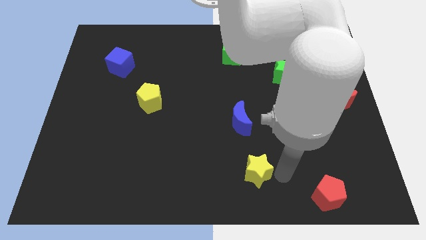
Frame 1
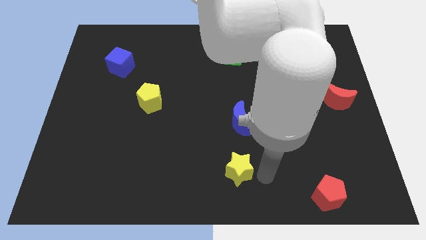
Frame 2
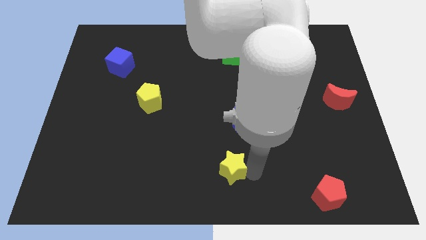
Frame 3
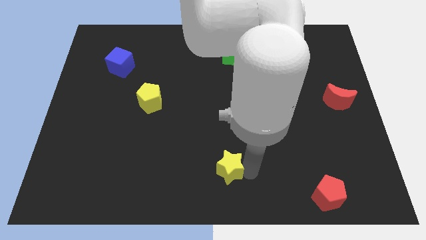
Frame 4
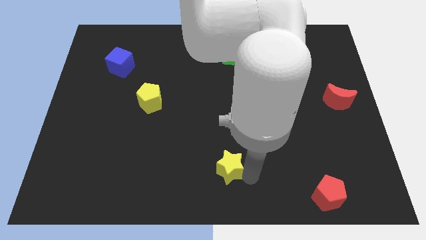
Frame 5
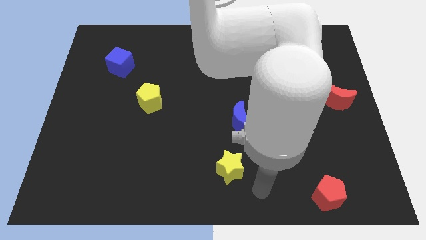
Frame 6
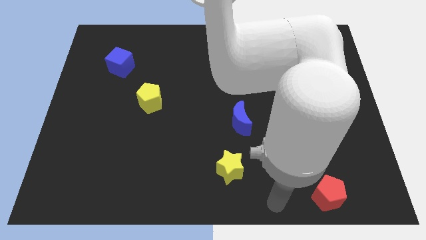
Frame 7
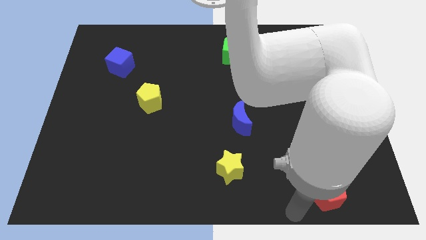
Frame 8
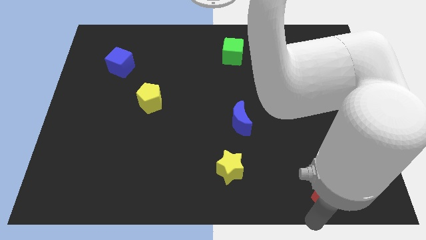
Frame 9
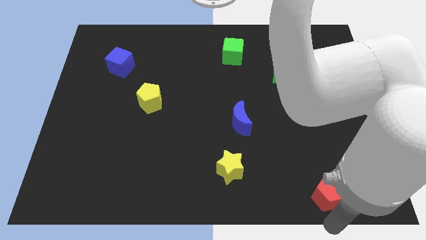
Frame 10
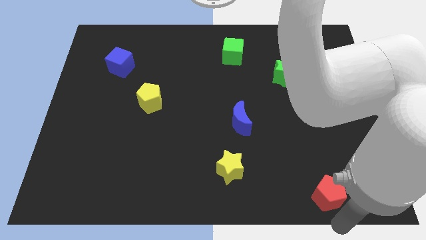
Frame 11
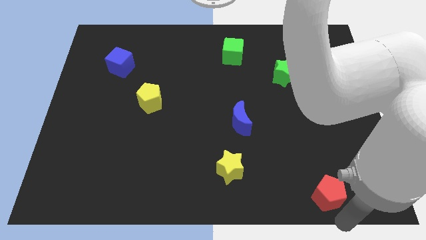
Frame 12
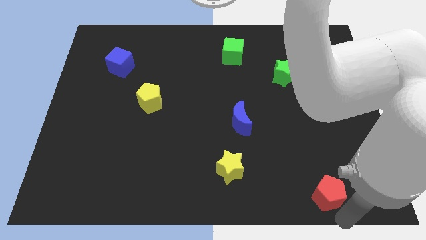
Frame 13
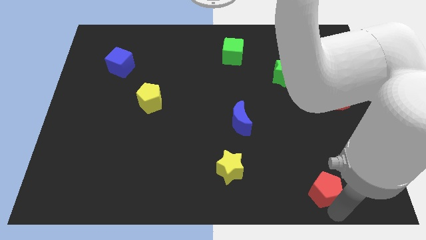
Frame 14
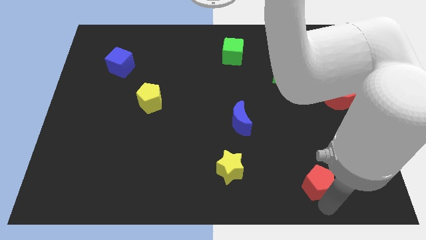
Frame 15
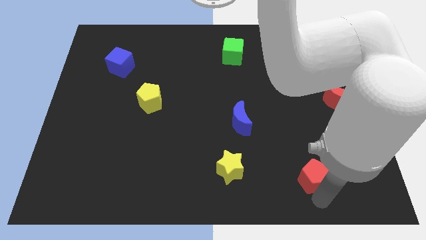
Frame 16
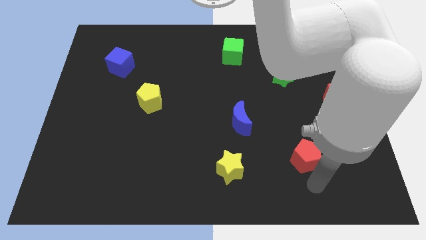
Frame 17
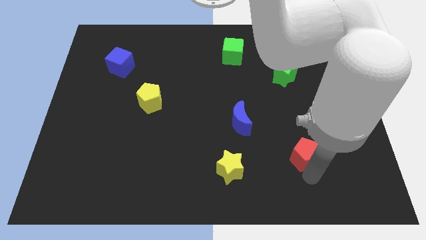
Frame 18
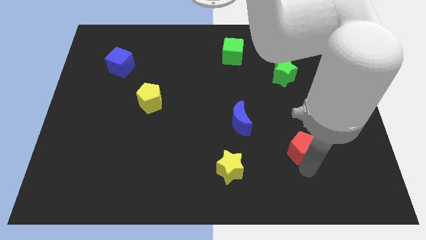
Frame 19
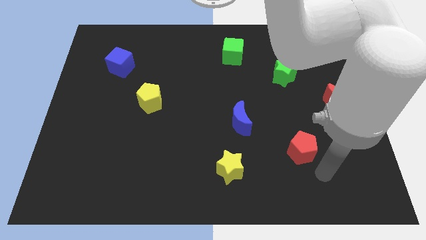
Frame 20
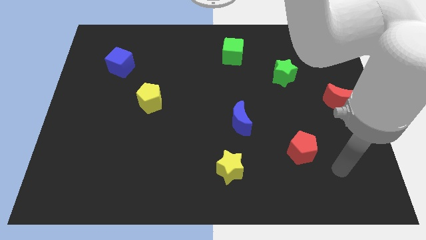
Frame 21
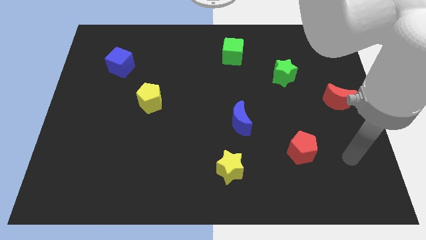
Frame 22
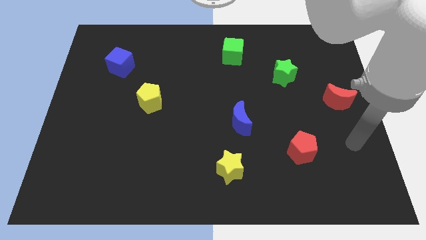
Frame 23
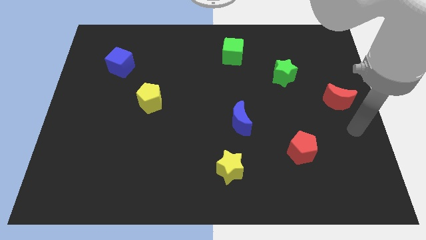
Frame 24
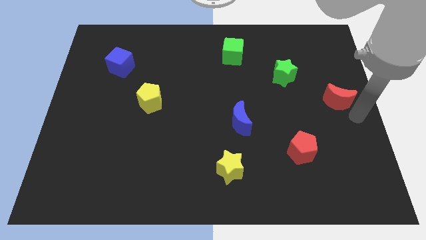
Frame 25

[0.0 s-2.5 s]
place the red pentagon towards the bottom left to the red moon

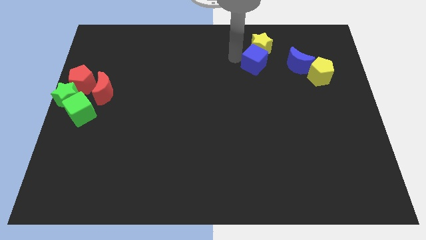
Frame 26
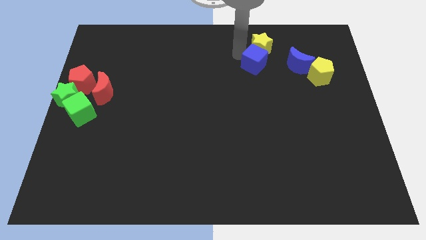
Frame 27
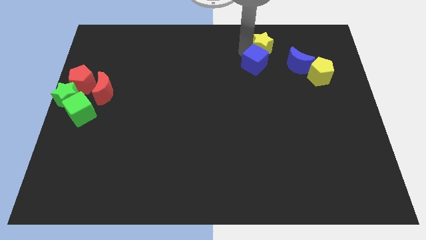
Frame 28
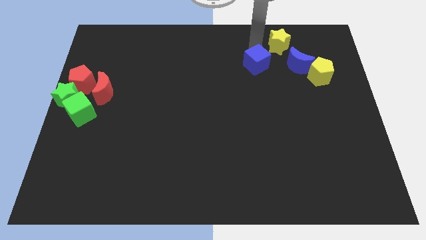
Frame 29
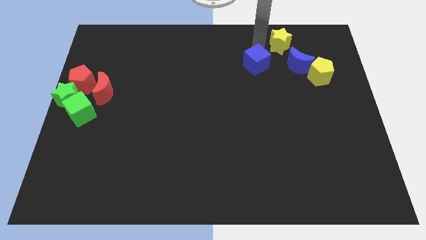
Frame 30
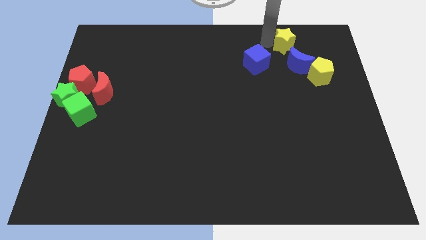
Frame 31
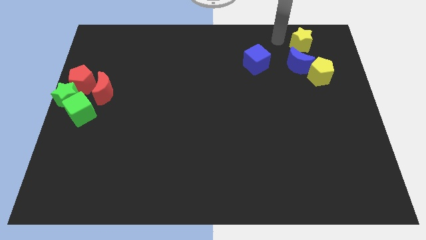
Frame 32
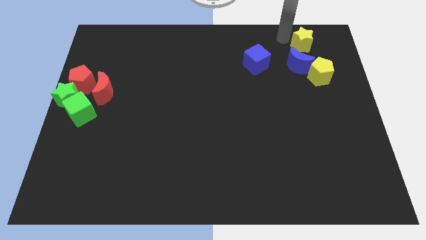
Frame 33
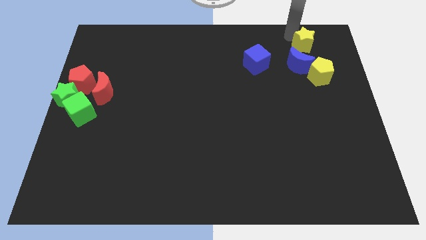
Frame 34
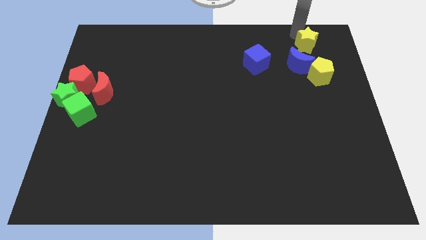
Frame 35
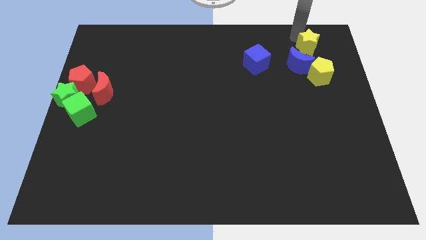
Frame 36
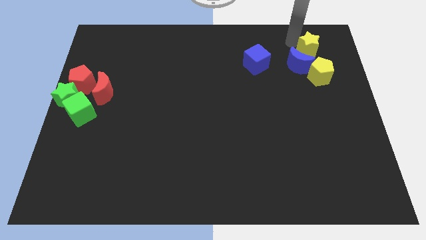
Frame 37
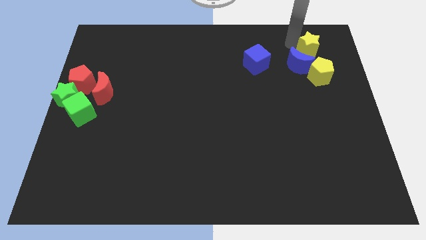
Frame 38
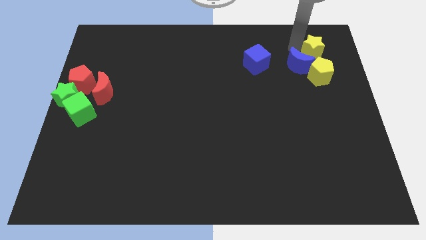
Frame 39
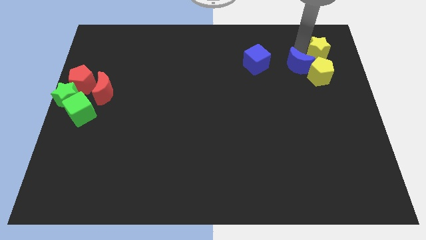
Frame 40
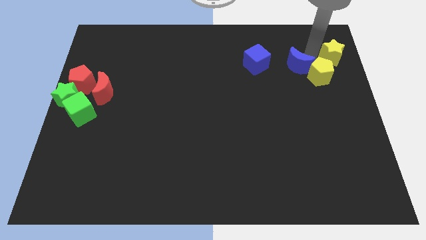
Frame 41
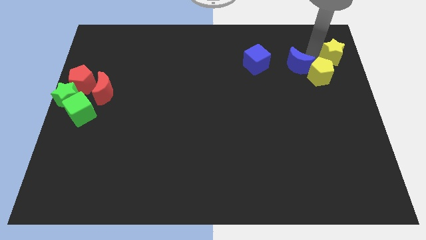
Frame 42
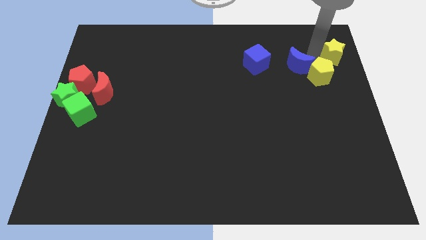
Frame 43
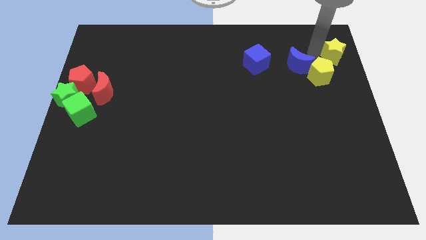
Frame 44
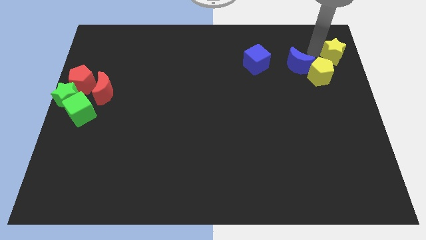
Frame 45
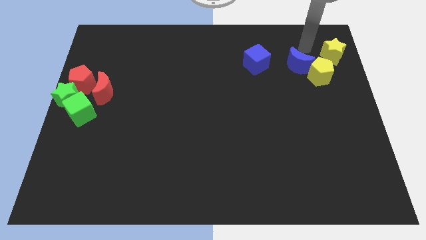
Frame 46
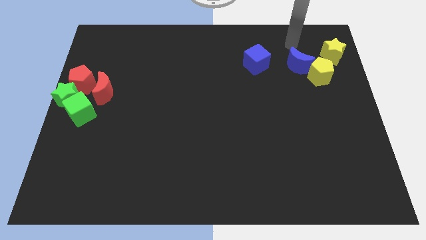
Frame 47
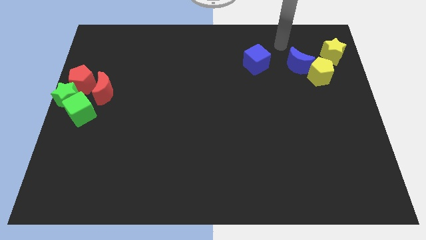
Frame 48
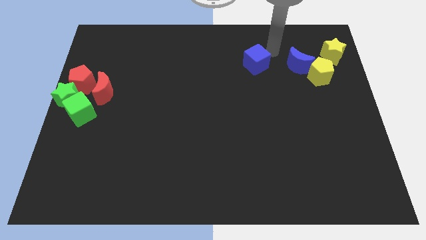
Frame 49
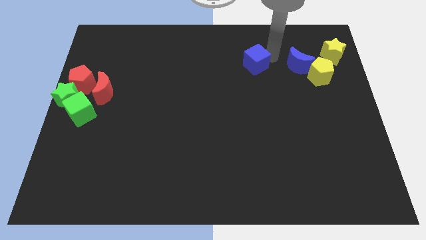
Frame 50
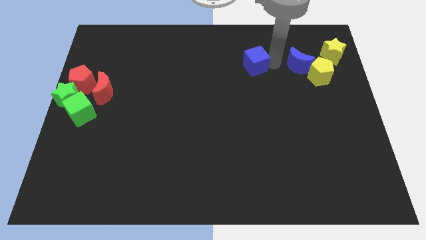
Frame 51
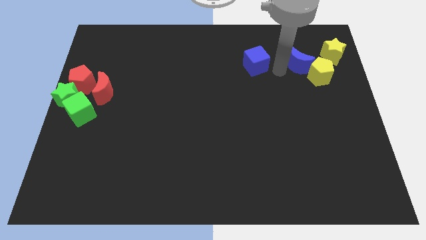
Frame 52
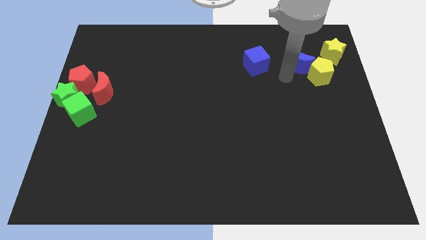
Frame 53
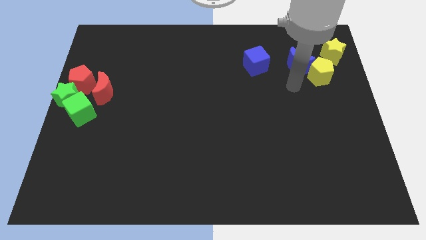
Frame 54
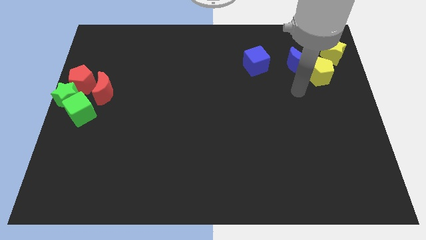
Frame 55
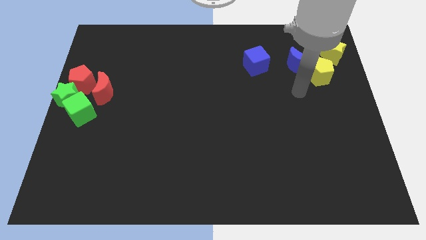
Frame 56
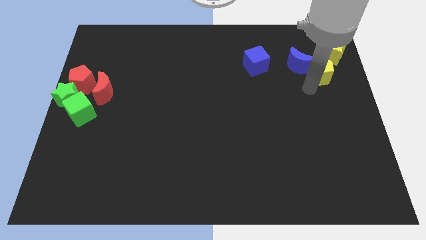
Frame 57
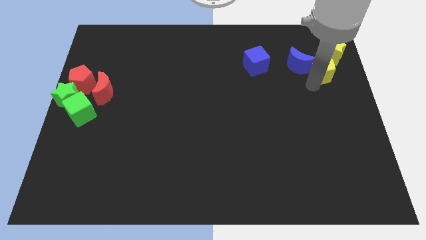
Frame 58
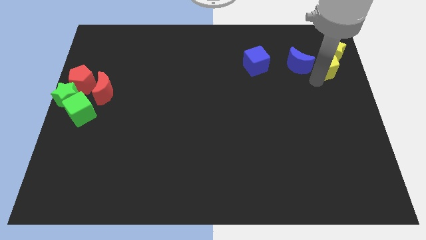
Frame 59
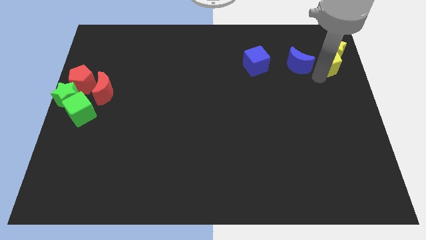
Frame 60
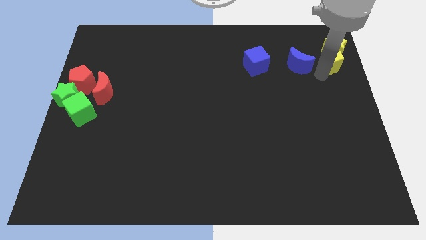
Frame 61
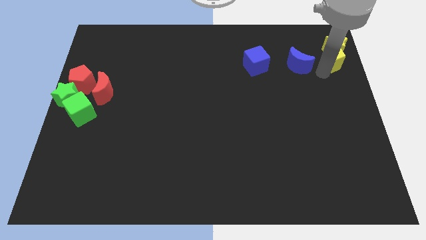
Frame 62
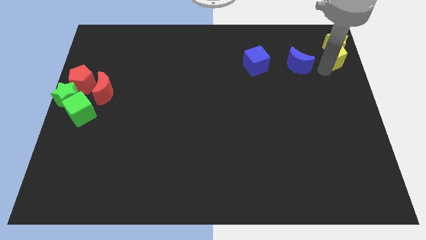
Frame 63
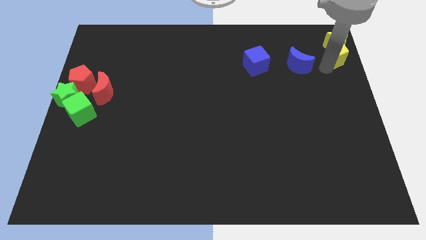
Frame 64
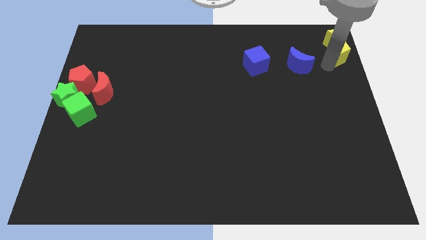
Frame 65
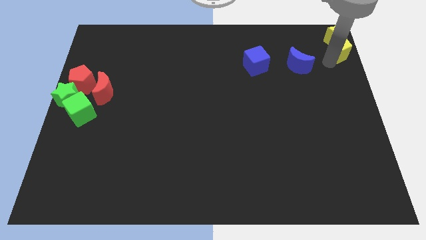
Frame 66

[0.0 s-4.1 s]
move yellow pentagon into the yellow star

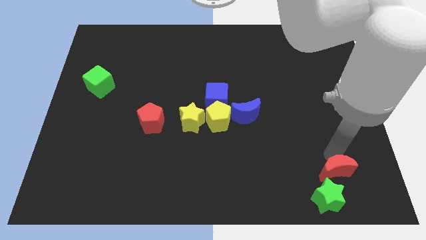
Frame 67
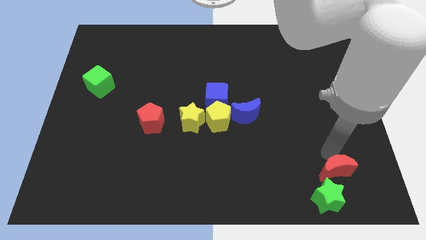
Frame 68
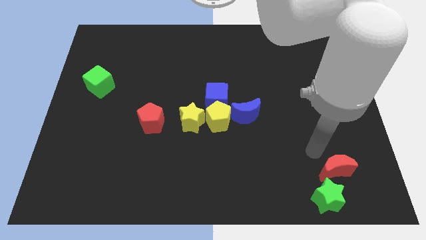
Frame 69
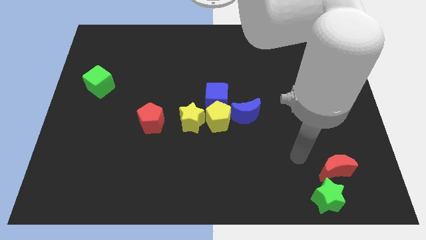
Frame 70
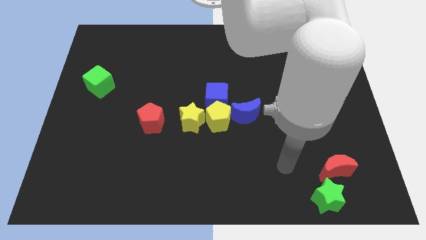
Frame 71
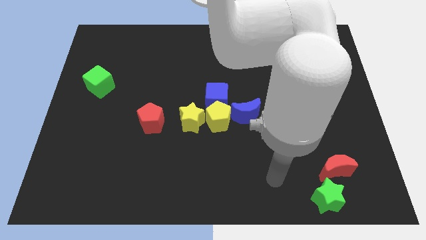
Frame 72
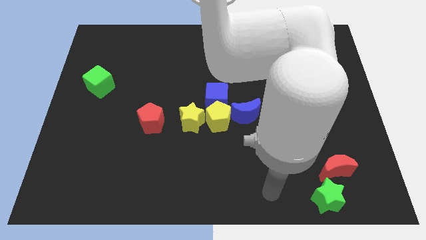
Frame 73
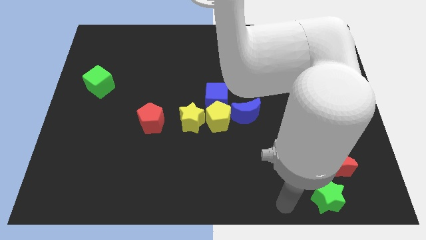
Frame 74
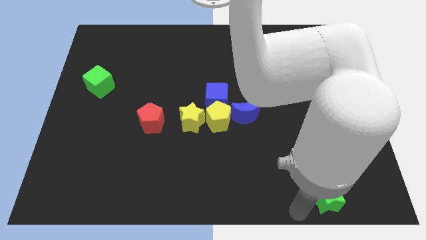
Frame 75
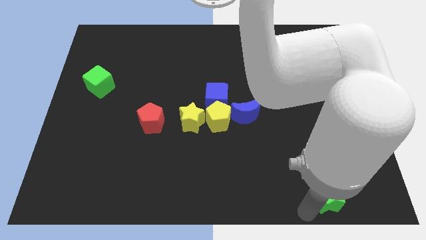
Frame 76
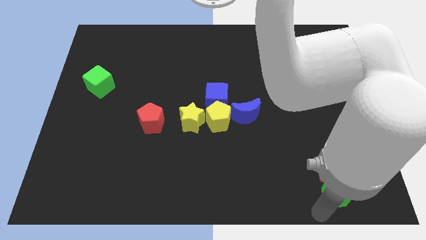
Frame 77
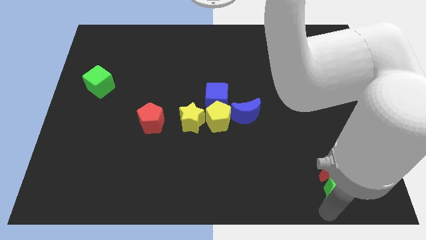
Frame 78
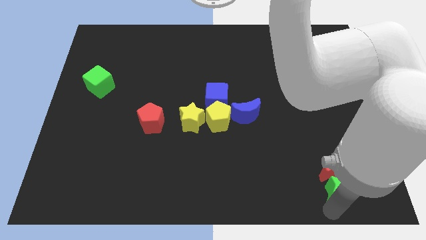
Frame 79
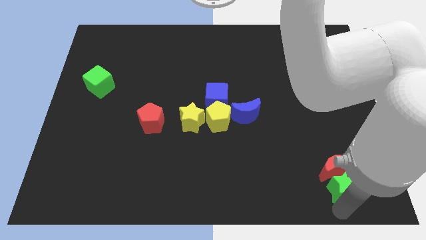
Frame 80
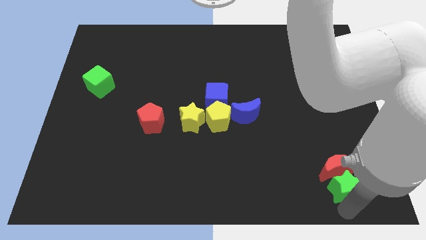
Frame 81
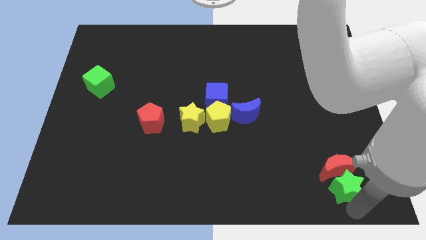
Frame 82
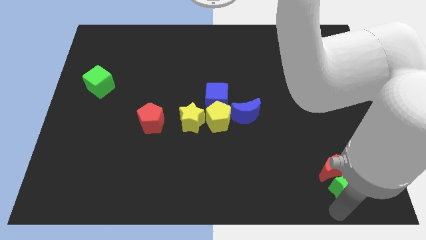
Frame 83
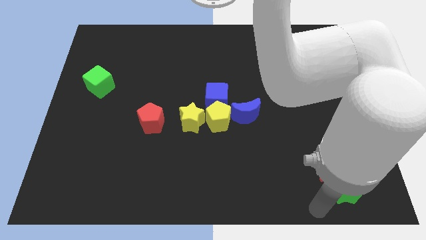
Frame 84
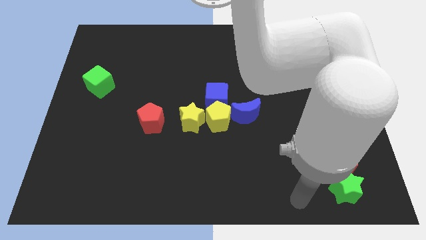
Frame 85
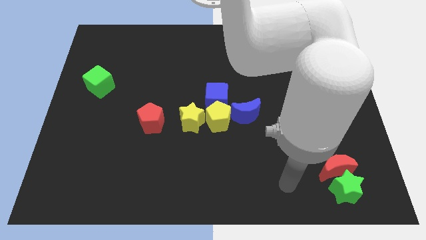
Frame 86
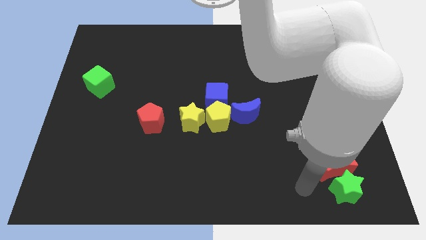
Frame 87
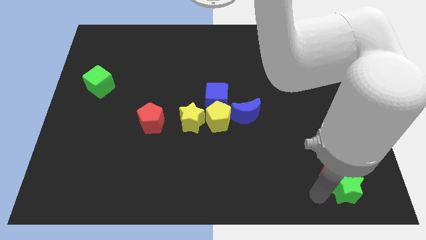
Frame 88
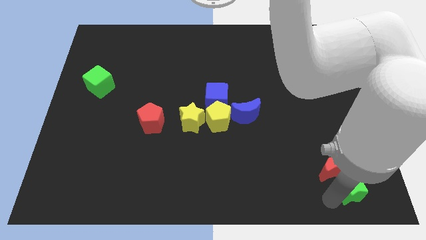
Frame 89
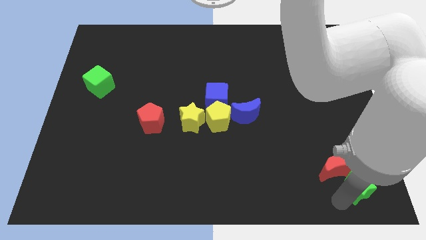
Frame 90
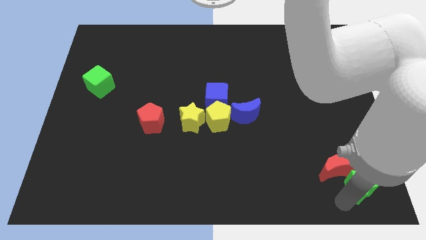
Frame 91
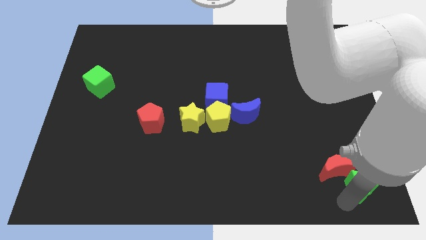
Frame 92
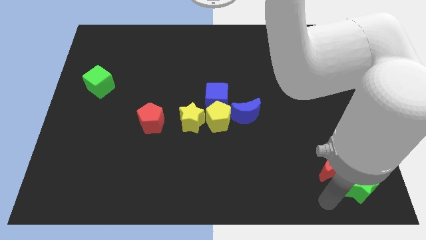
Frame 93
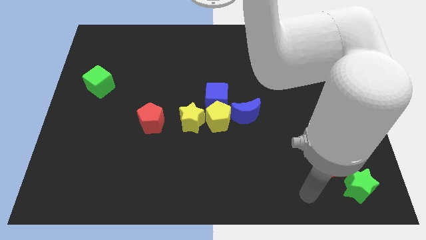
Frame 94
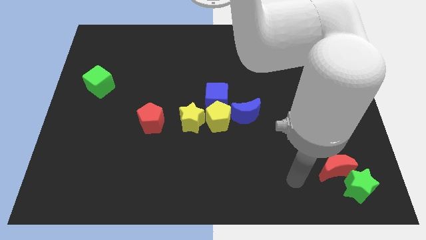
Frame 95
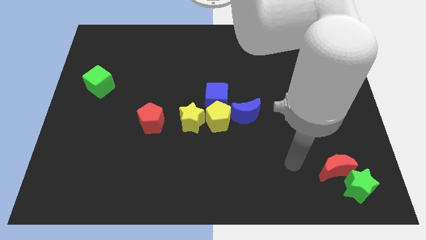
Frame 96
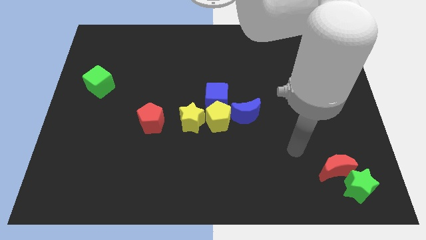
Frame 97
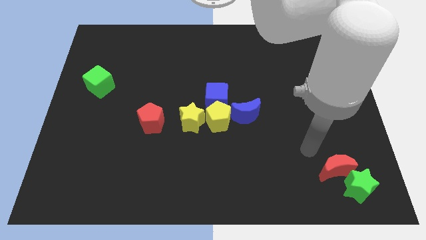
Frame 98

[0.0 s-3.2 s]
push the green star towards right bottom
